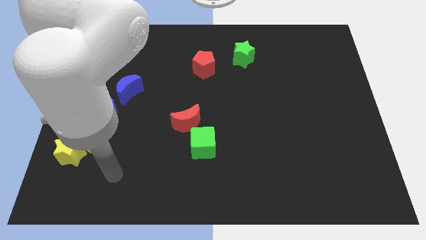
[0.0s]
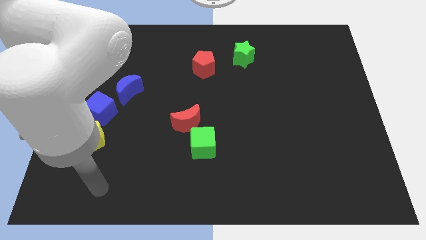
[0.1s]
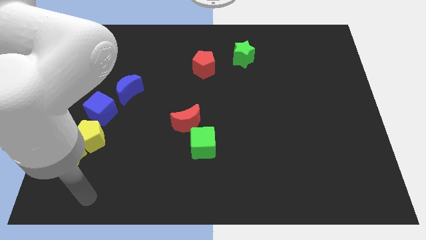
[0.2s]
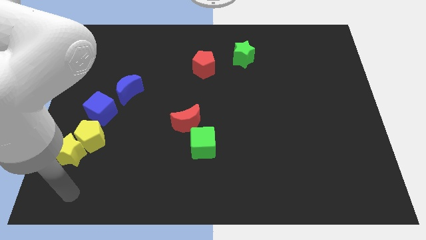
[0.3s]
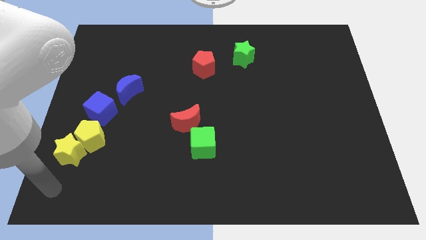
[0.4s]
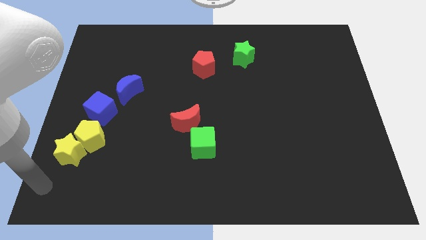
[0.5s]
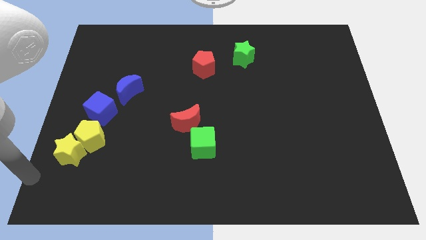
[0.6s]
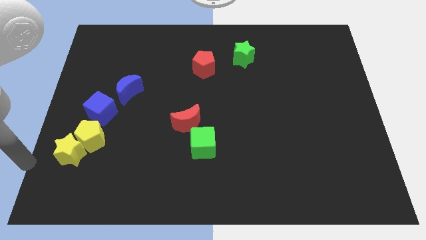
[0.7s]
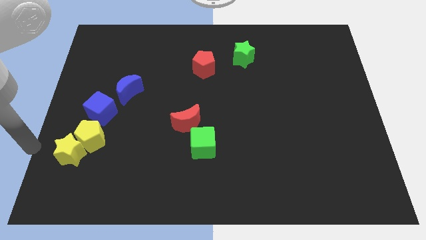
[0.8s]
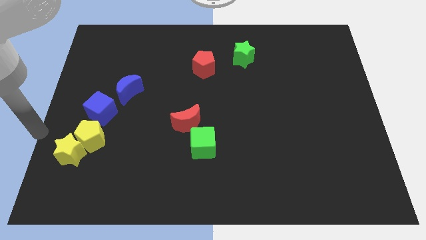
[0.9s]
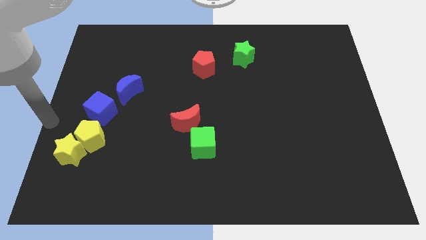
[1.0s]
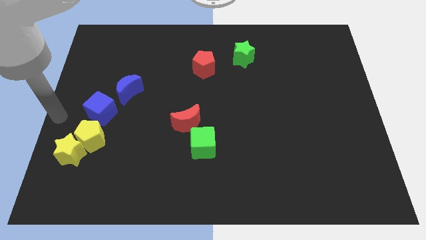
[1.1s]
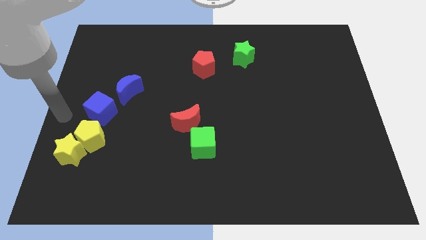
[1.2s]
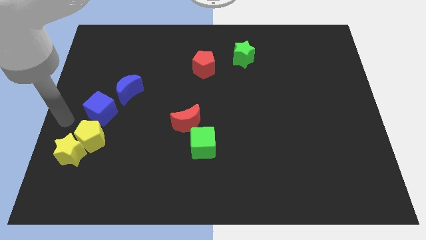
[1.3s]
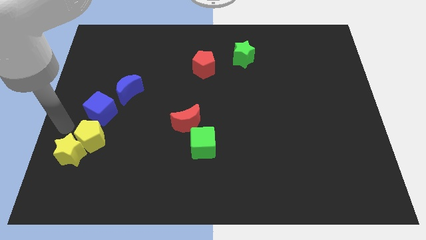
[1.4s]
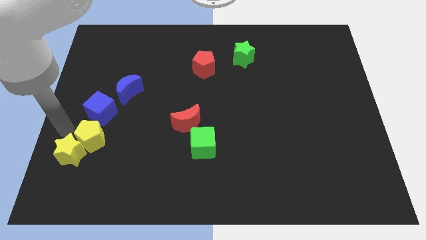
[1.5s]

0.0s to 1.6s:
place the arm to the top left of the yellow star

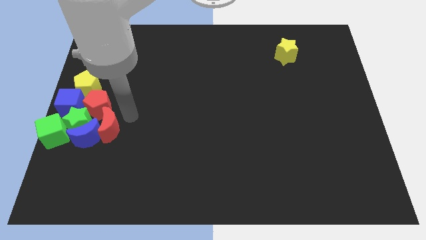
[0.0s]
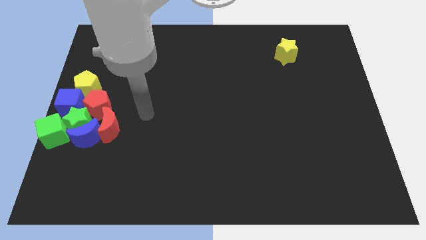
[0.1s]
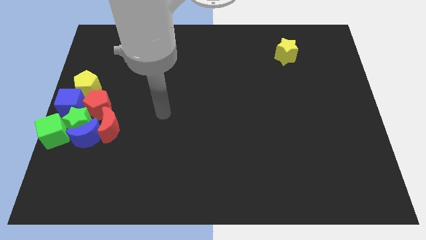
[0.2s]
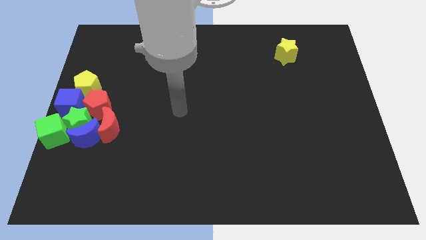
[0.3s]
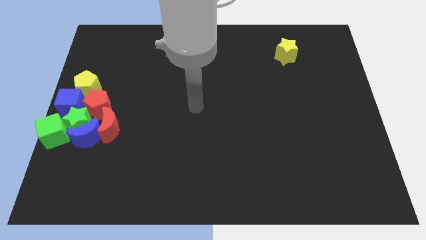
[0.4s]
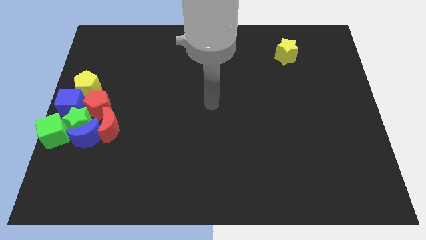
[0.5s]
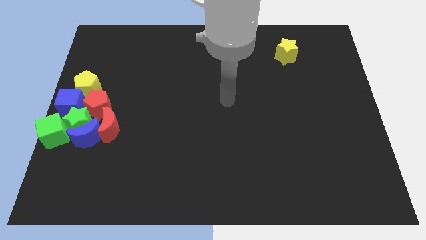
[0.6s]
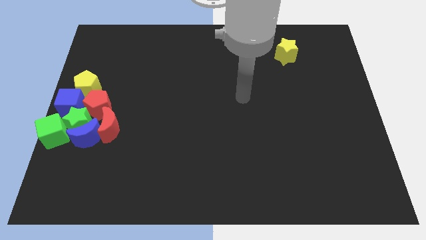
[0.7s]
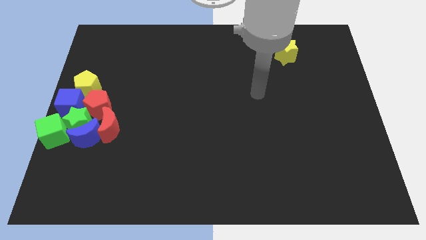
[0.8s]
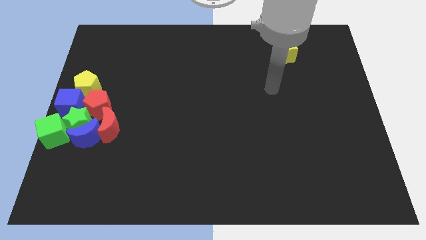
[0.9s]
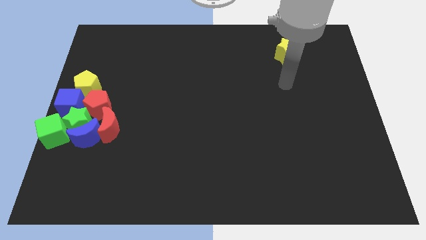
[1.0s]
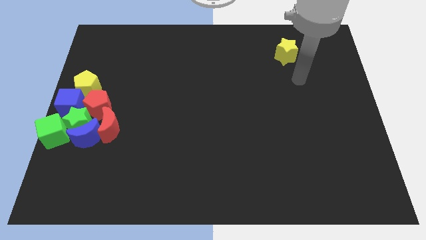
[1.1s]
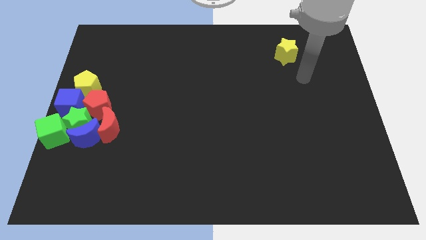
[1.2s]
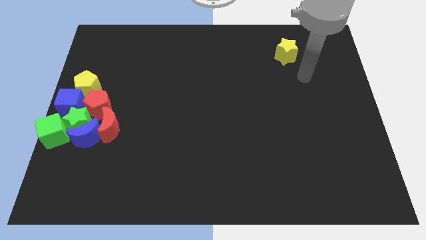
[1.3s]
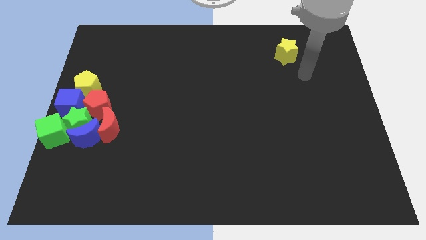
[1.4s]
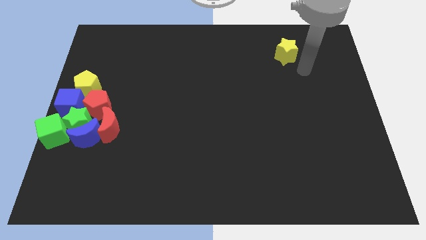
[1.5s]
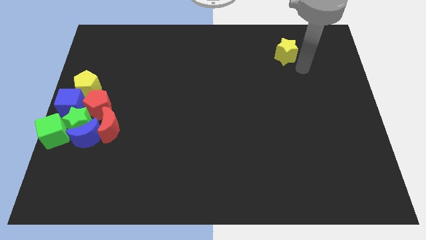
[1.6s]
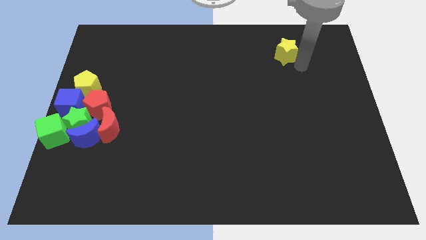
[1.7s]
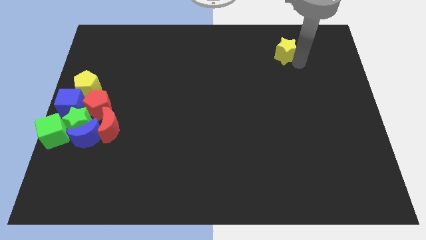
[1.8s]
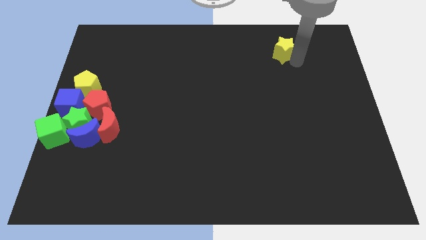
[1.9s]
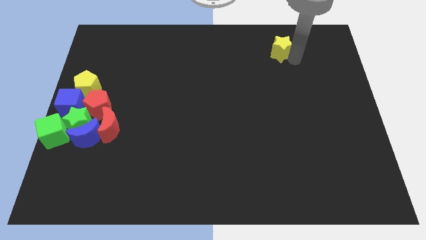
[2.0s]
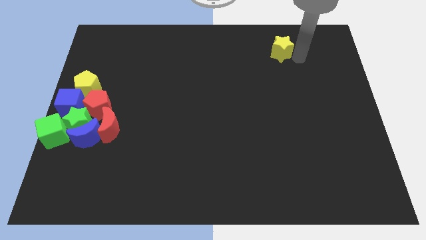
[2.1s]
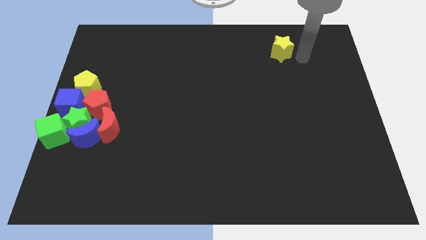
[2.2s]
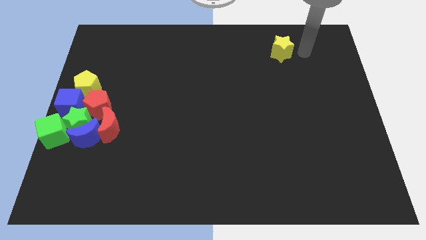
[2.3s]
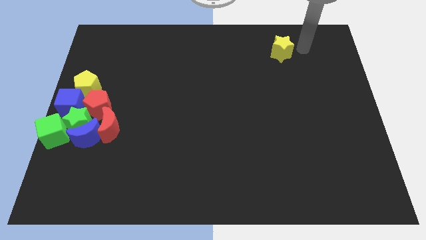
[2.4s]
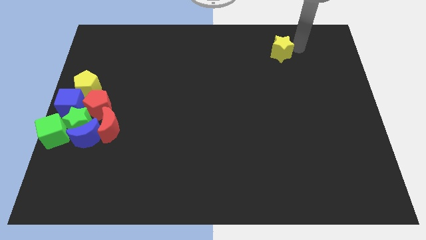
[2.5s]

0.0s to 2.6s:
move your arm away from the red moon

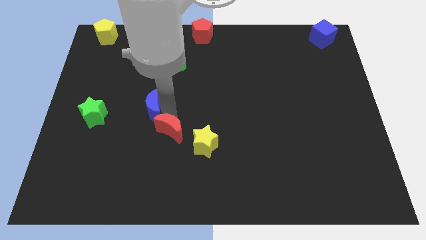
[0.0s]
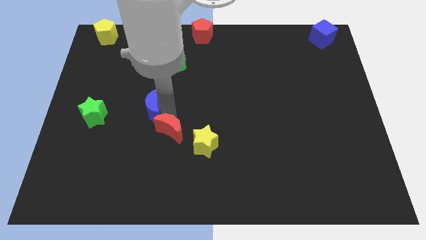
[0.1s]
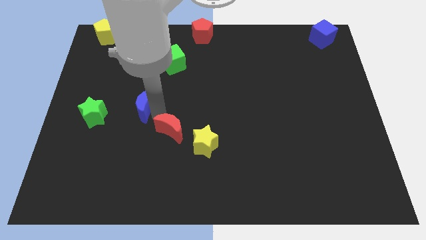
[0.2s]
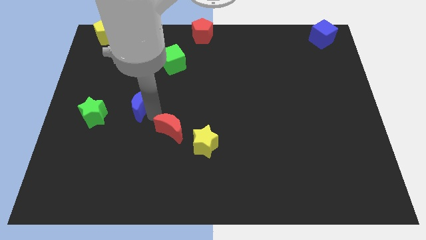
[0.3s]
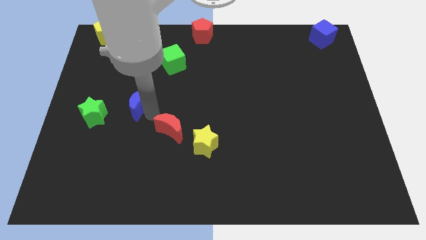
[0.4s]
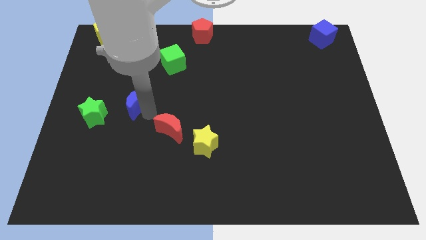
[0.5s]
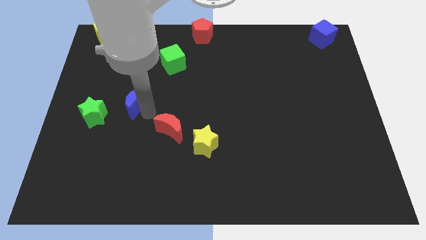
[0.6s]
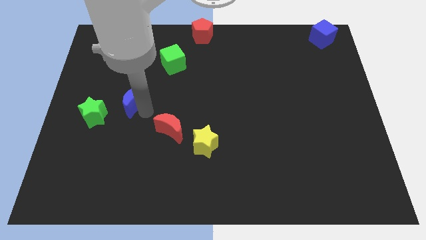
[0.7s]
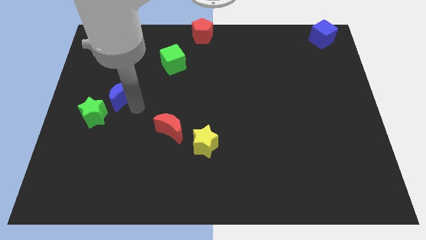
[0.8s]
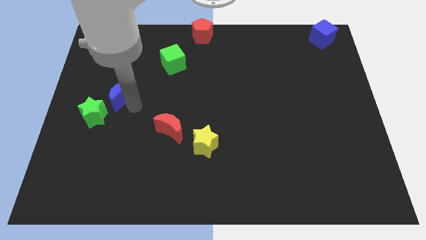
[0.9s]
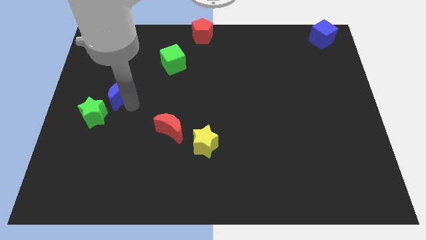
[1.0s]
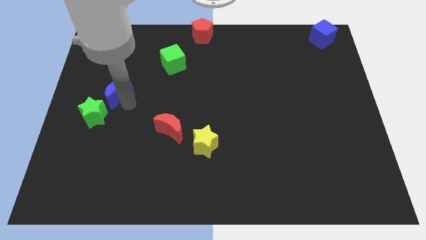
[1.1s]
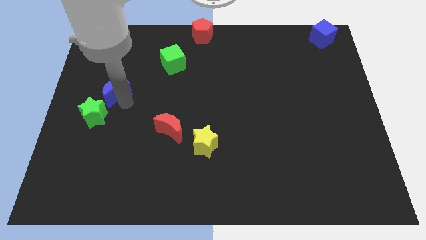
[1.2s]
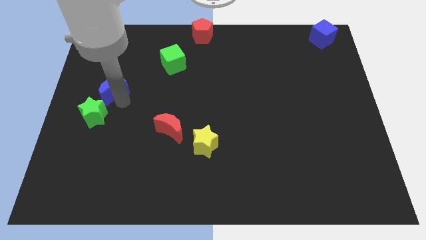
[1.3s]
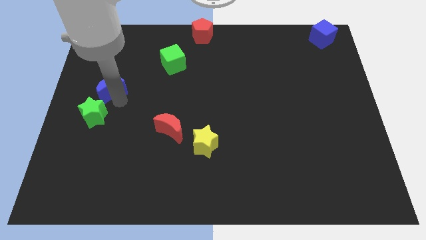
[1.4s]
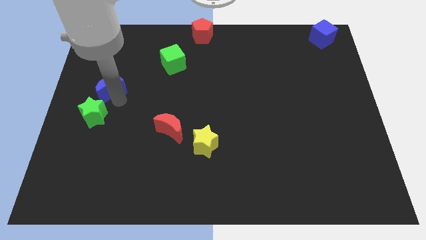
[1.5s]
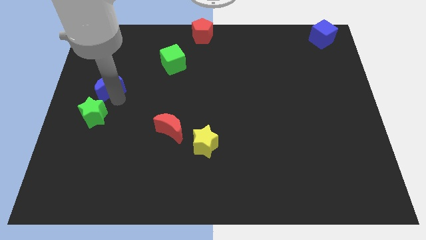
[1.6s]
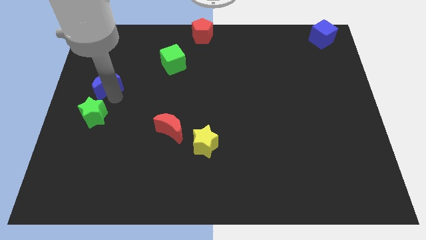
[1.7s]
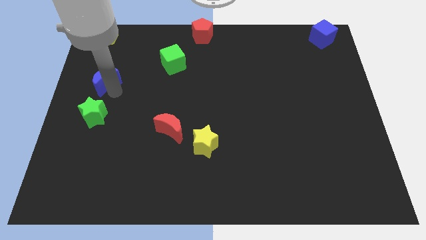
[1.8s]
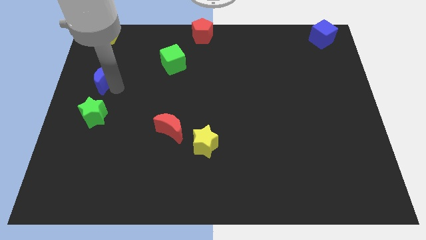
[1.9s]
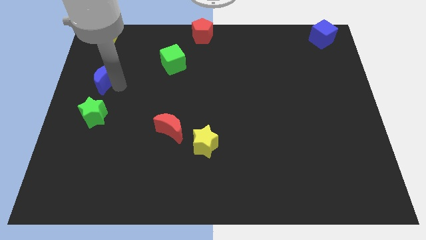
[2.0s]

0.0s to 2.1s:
push the blue crescent above the green star

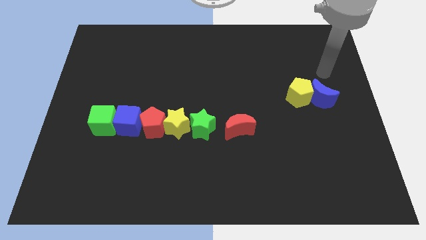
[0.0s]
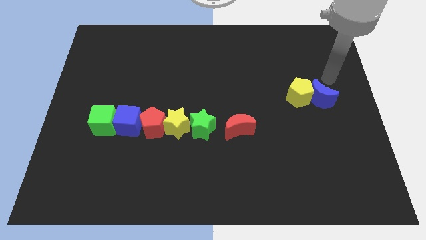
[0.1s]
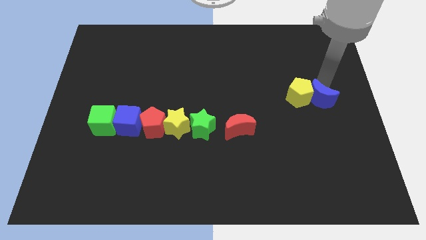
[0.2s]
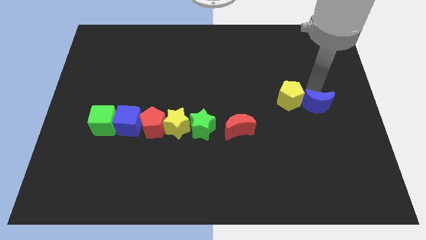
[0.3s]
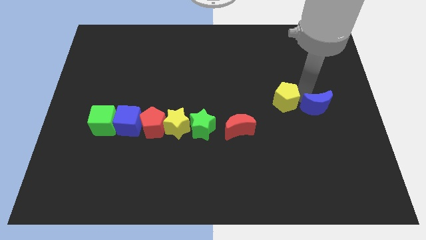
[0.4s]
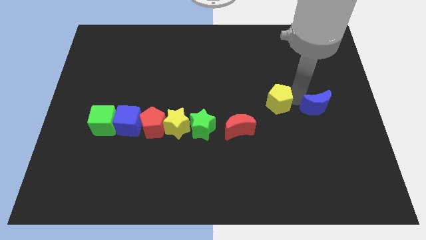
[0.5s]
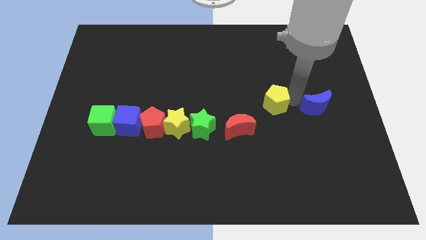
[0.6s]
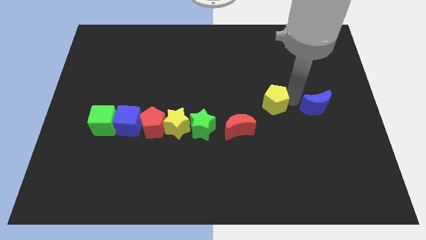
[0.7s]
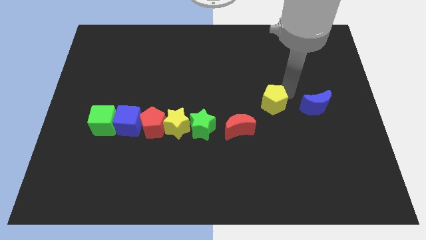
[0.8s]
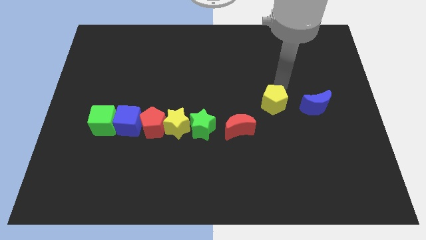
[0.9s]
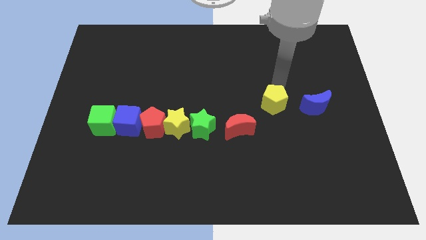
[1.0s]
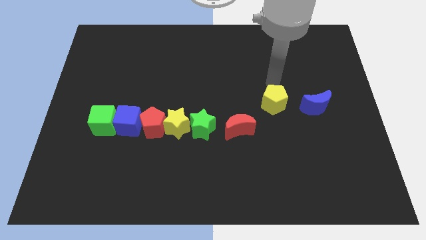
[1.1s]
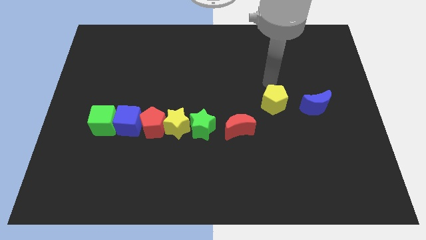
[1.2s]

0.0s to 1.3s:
move the yellow pentagon away from the blue moon

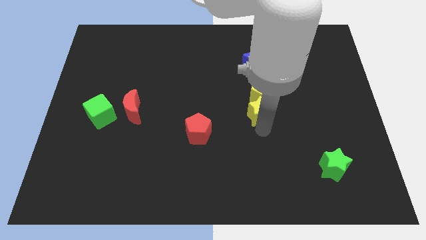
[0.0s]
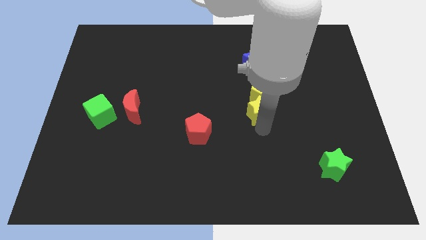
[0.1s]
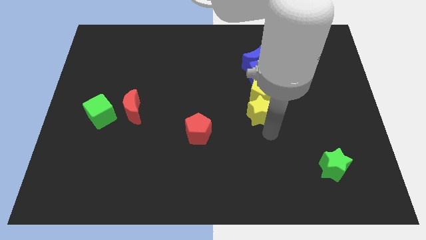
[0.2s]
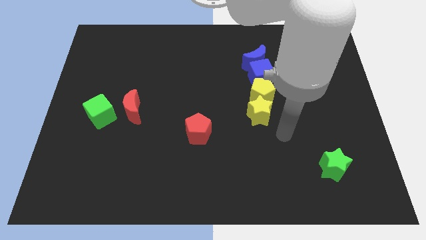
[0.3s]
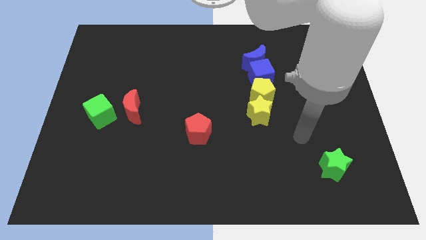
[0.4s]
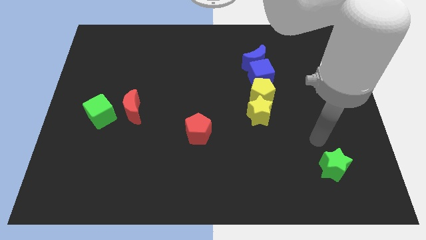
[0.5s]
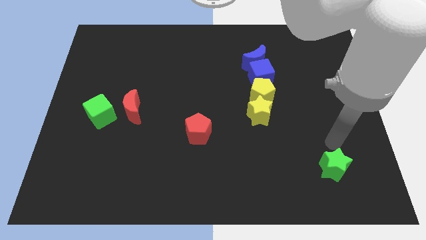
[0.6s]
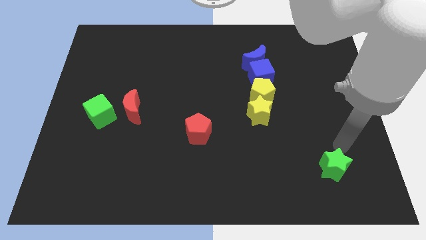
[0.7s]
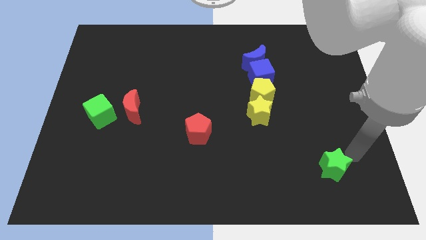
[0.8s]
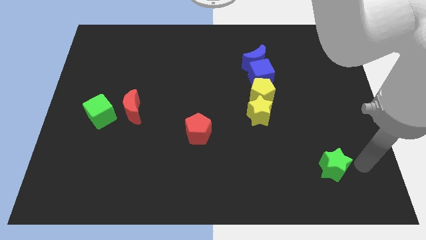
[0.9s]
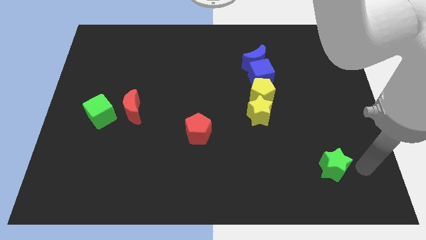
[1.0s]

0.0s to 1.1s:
point your arm at the right of the green star

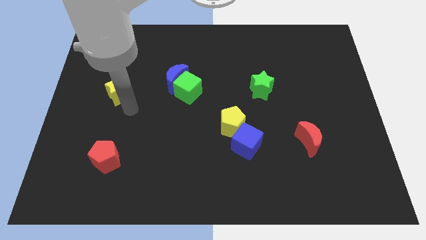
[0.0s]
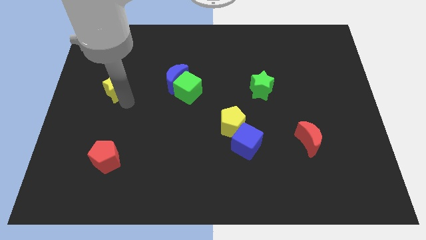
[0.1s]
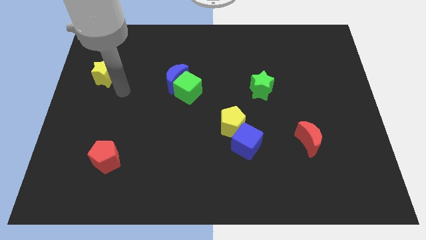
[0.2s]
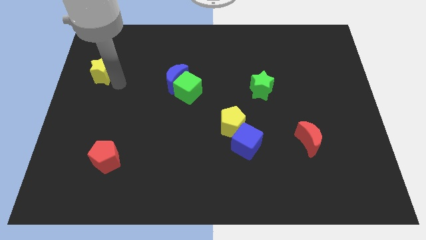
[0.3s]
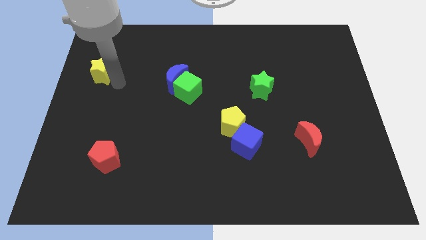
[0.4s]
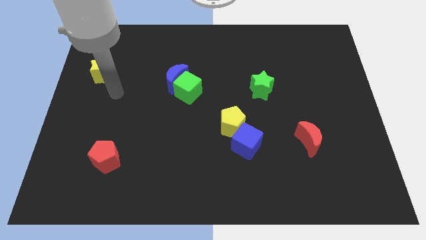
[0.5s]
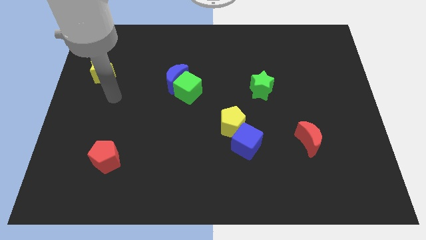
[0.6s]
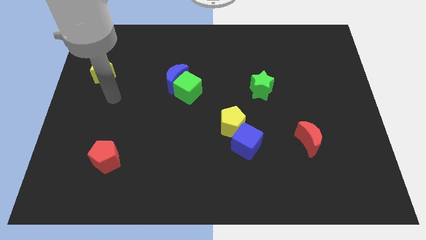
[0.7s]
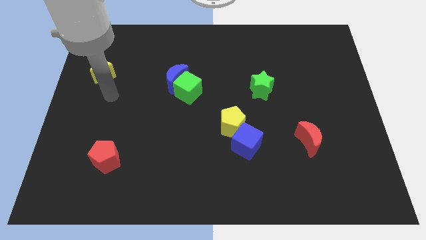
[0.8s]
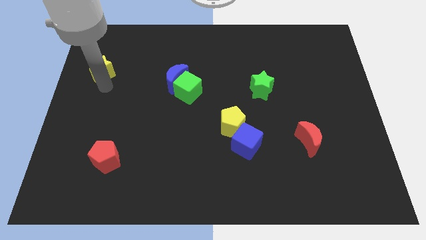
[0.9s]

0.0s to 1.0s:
move the yellow star upwards
